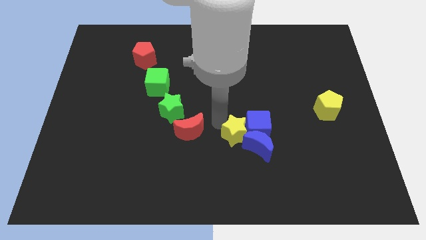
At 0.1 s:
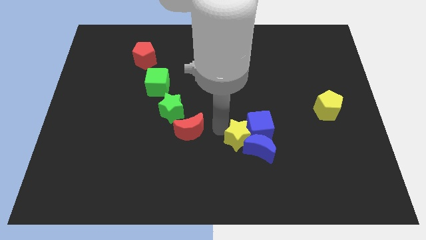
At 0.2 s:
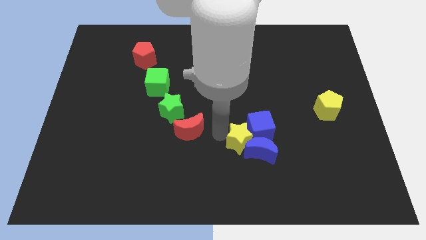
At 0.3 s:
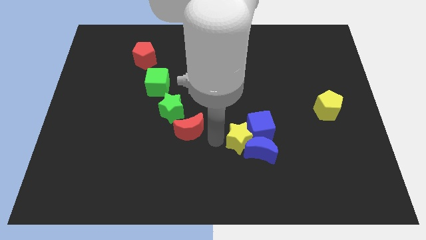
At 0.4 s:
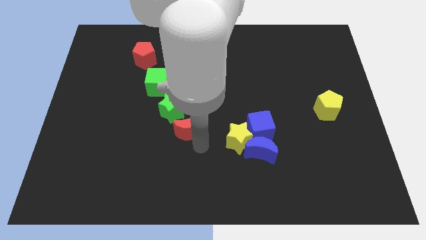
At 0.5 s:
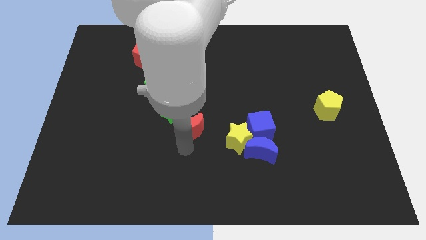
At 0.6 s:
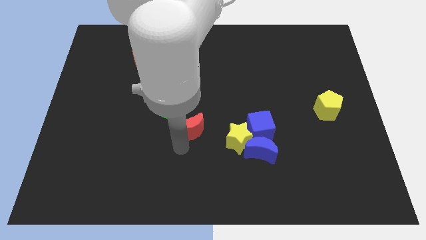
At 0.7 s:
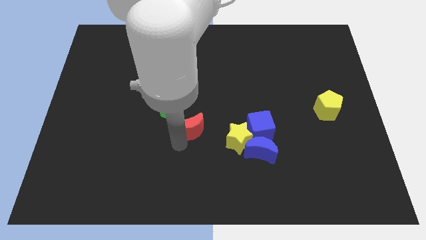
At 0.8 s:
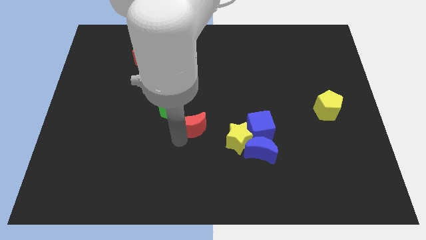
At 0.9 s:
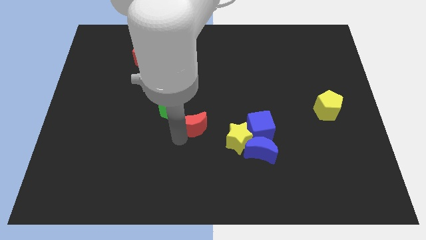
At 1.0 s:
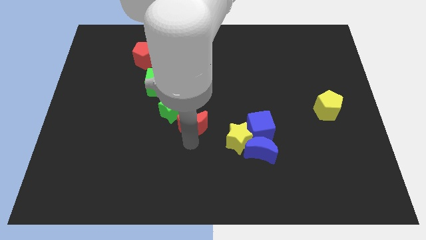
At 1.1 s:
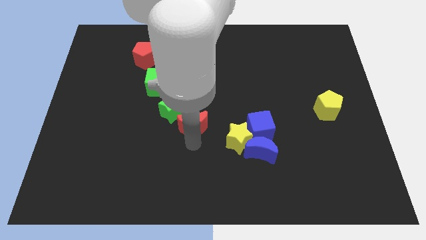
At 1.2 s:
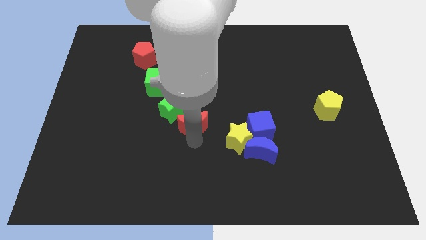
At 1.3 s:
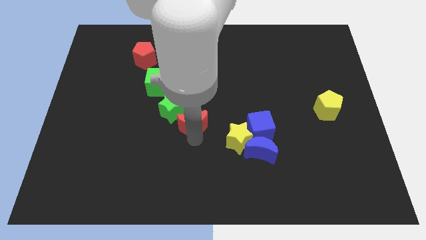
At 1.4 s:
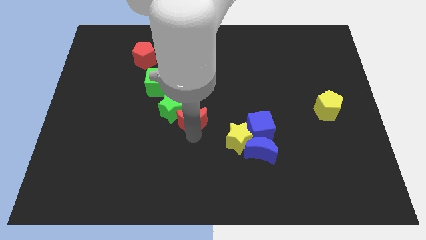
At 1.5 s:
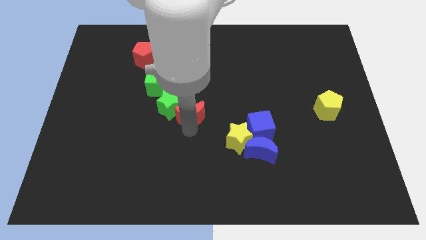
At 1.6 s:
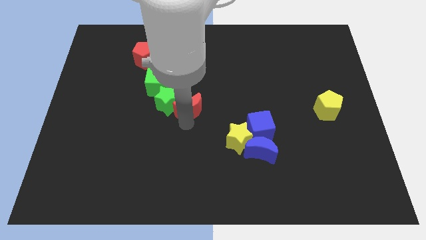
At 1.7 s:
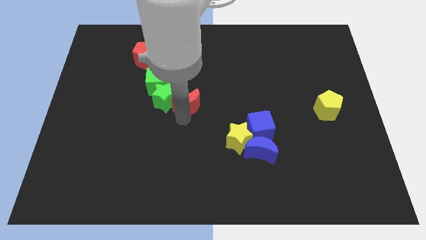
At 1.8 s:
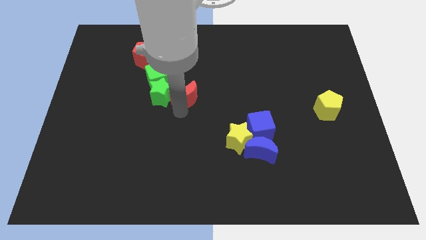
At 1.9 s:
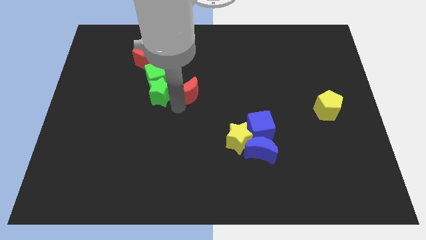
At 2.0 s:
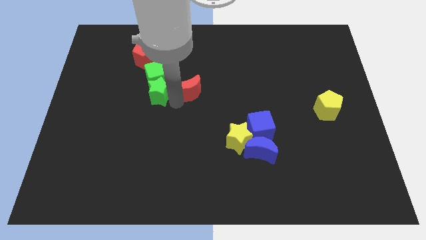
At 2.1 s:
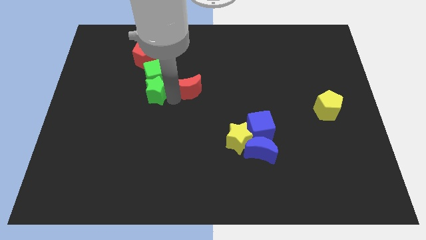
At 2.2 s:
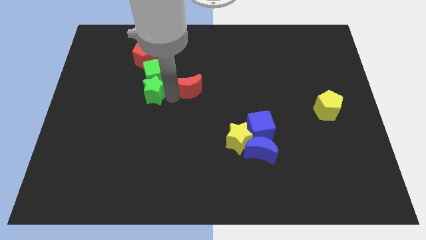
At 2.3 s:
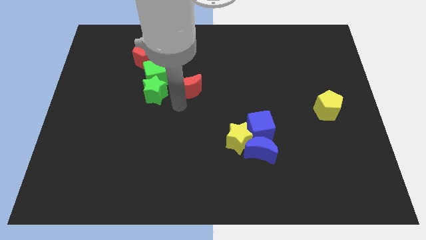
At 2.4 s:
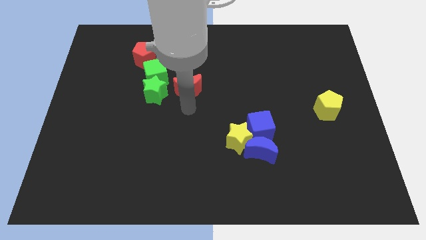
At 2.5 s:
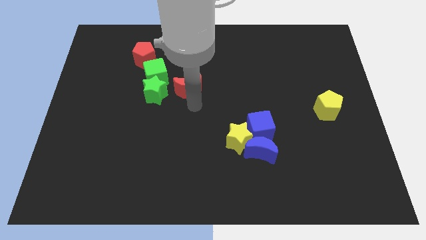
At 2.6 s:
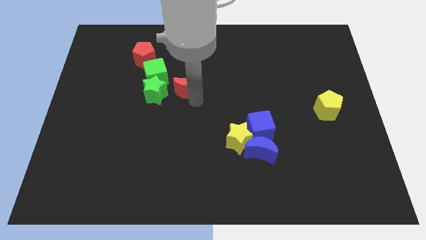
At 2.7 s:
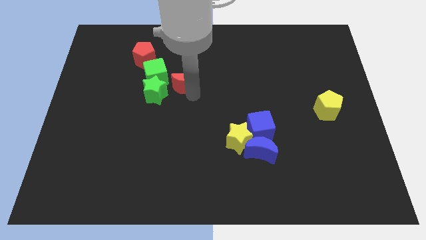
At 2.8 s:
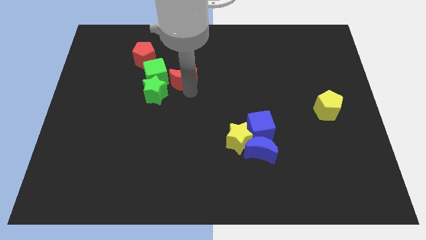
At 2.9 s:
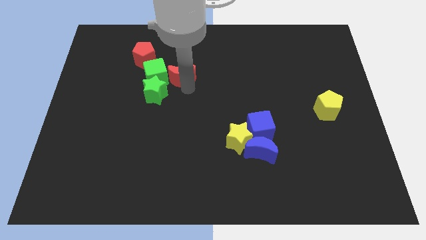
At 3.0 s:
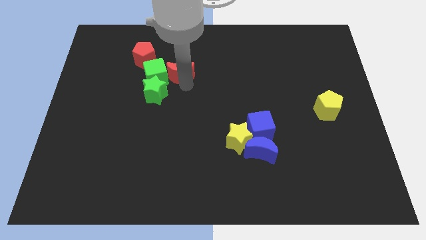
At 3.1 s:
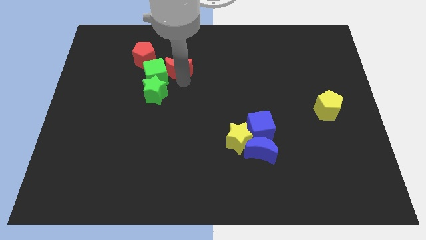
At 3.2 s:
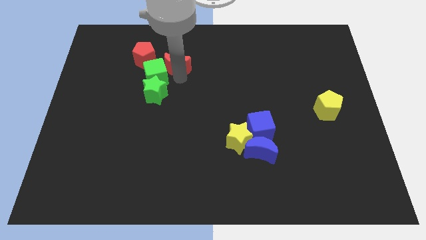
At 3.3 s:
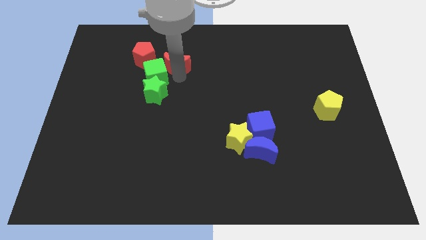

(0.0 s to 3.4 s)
push the green blocks and red moon to the top

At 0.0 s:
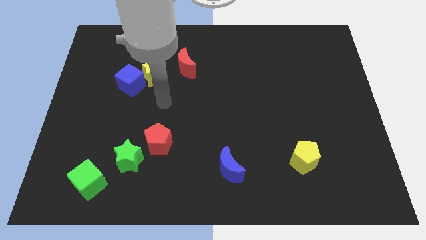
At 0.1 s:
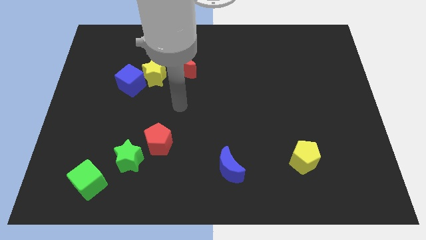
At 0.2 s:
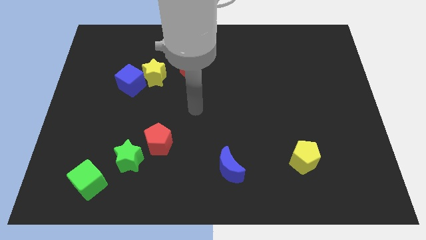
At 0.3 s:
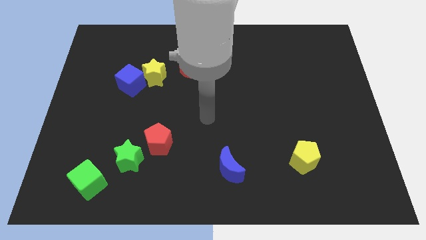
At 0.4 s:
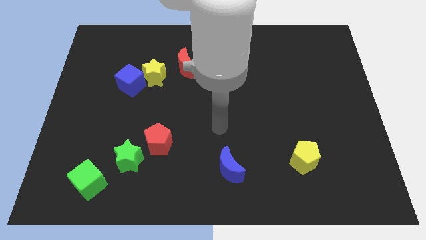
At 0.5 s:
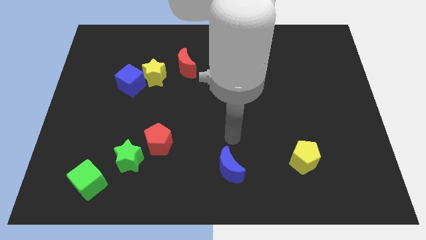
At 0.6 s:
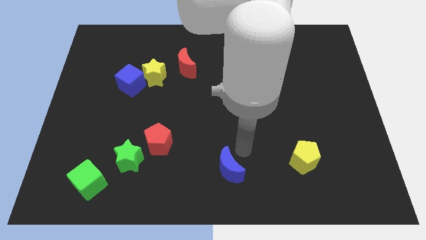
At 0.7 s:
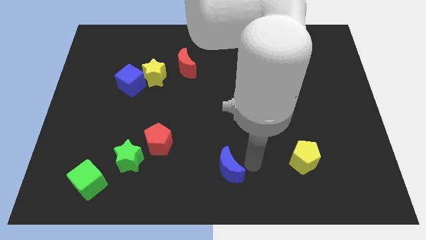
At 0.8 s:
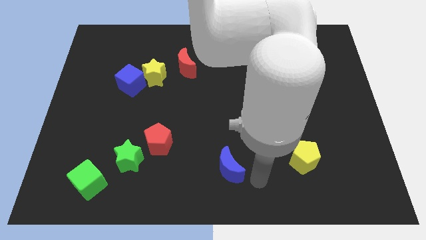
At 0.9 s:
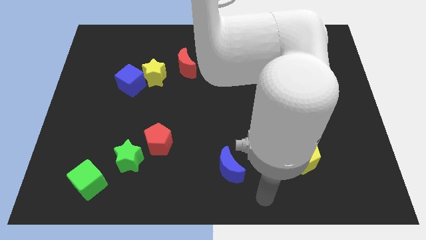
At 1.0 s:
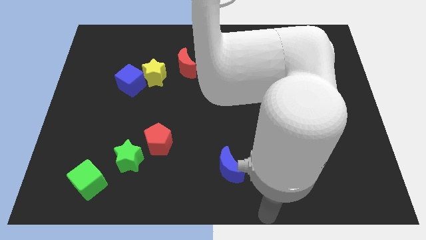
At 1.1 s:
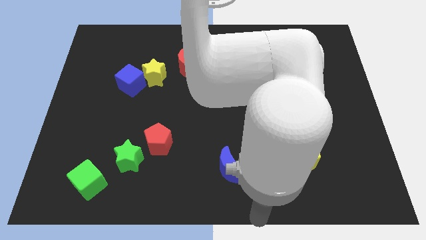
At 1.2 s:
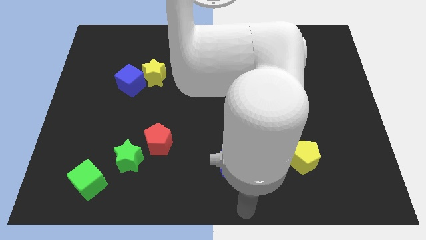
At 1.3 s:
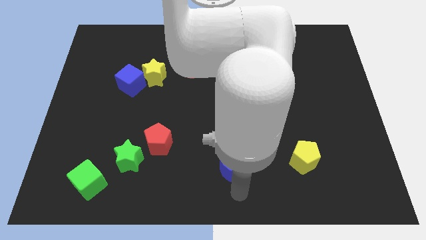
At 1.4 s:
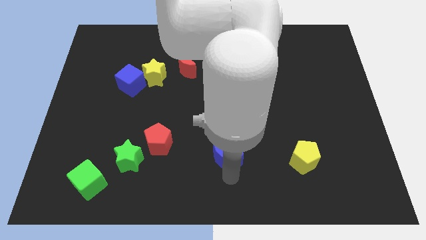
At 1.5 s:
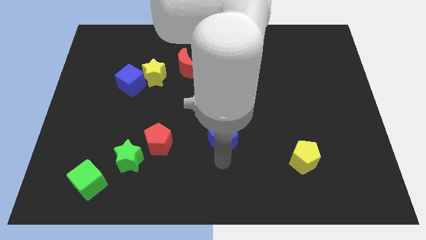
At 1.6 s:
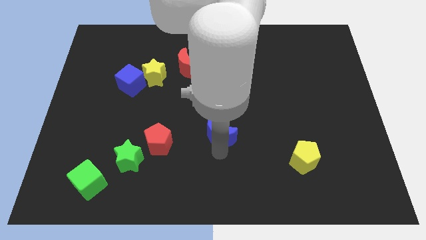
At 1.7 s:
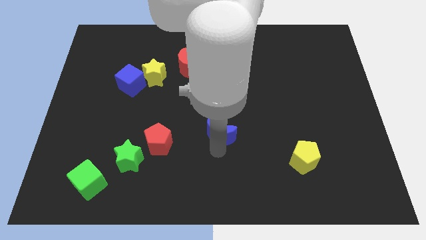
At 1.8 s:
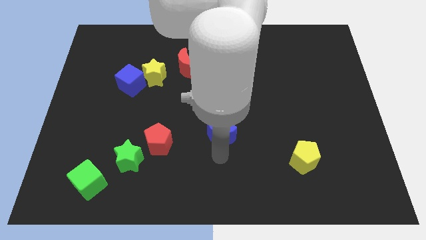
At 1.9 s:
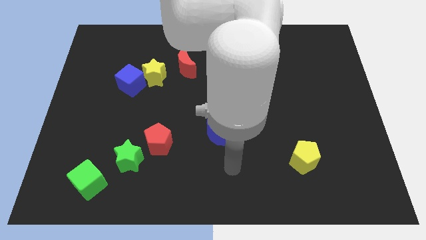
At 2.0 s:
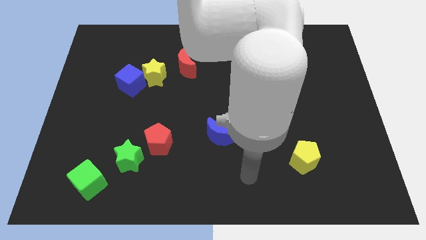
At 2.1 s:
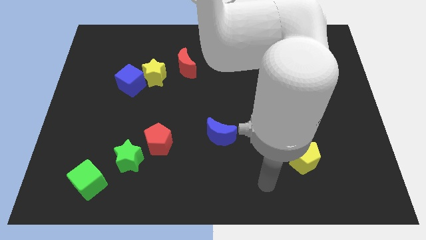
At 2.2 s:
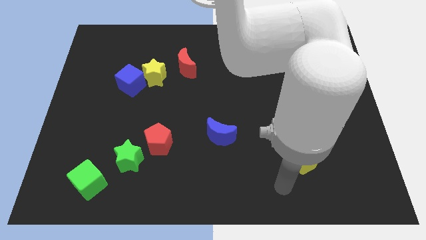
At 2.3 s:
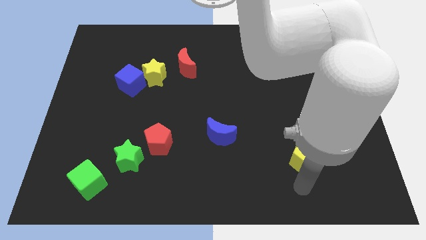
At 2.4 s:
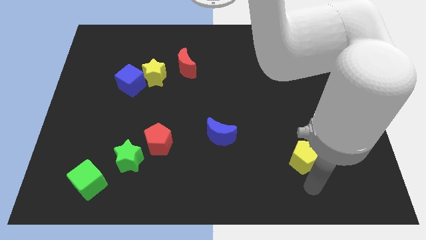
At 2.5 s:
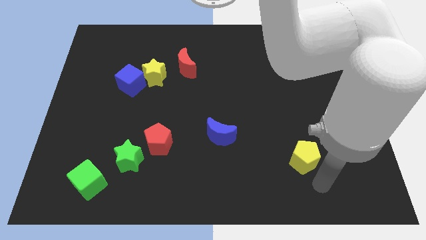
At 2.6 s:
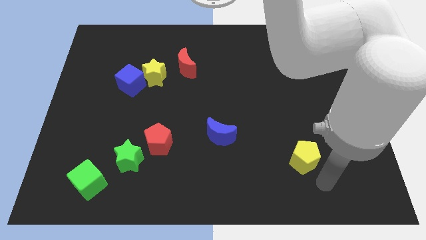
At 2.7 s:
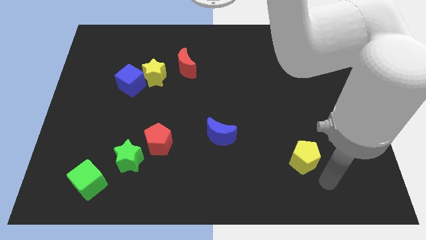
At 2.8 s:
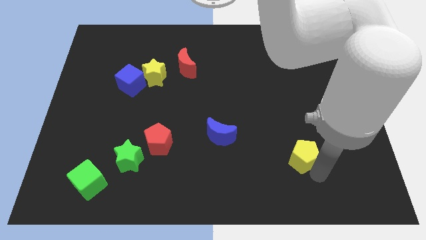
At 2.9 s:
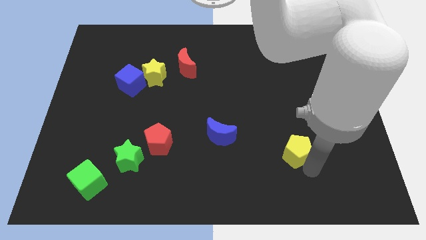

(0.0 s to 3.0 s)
move the blue crescent to the top of the board

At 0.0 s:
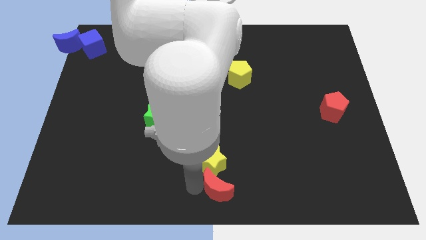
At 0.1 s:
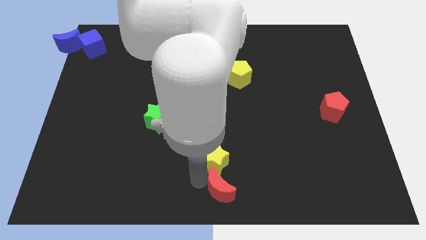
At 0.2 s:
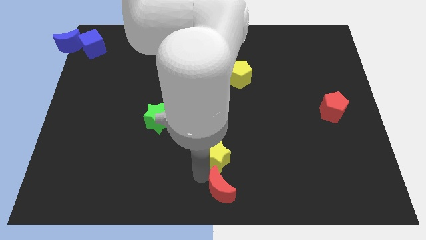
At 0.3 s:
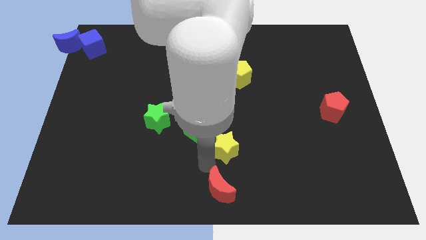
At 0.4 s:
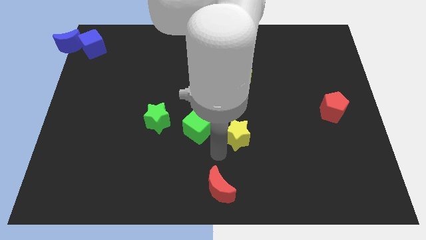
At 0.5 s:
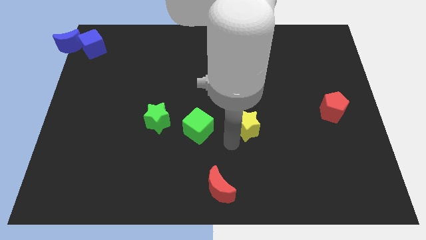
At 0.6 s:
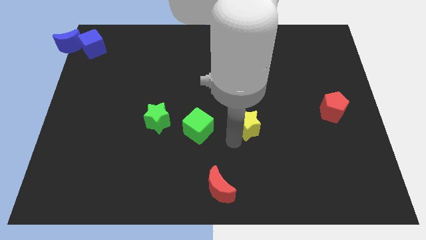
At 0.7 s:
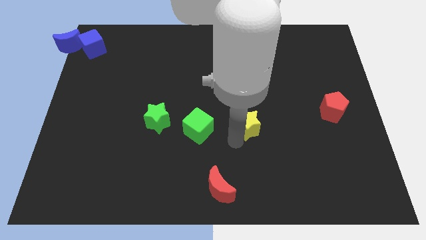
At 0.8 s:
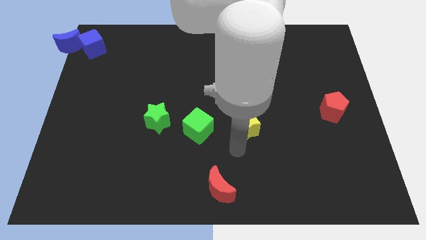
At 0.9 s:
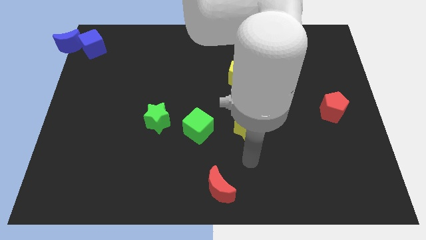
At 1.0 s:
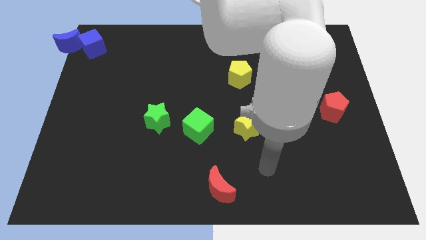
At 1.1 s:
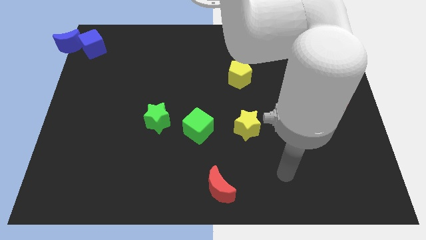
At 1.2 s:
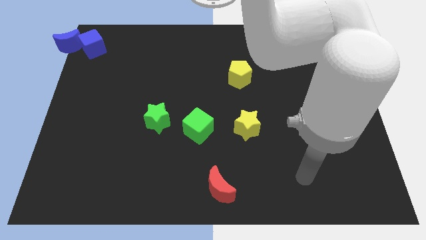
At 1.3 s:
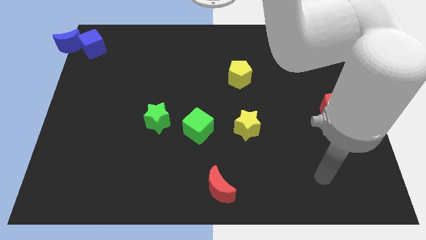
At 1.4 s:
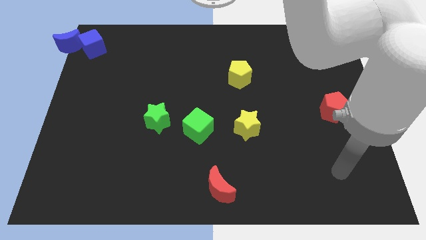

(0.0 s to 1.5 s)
separate the yellow star from the red moon

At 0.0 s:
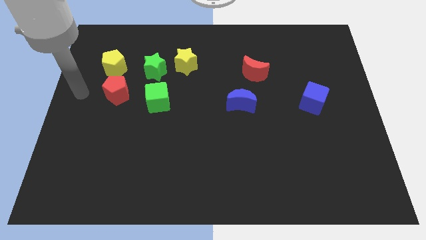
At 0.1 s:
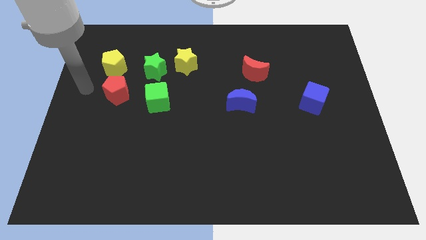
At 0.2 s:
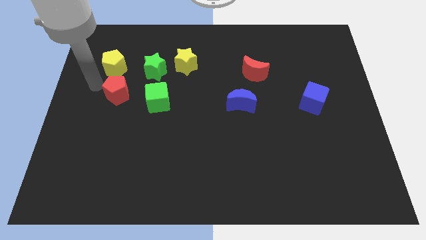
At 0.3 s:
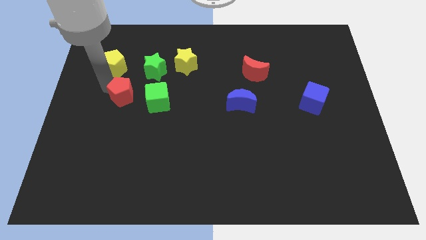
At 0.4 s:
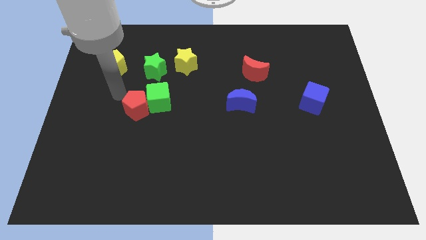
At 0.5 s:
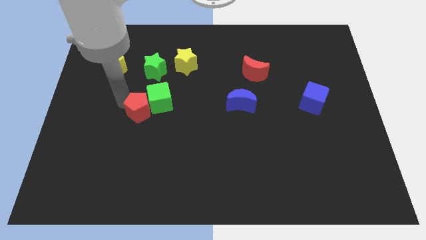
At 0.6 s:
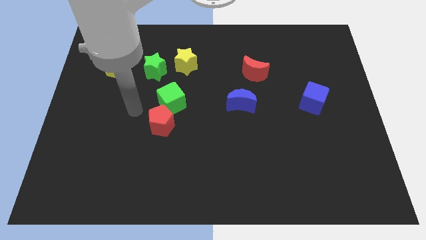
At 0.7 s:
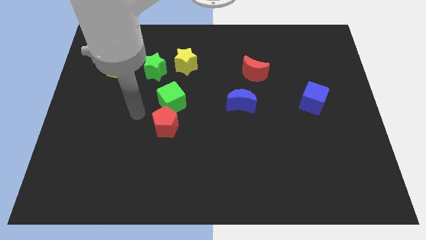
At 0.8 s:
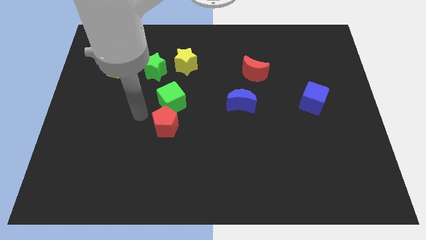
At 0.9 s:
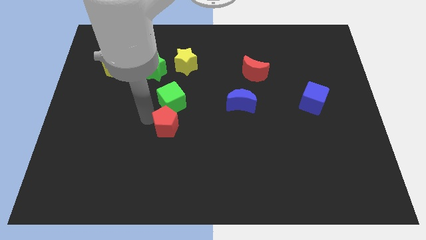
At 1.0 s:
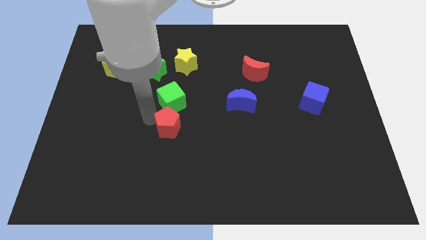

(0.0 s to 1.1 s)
push the red pentagon into the green cube
